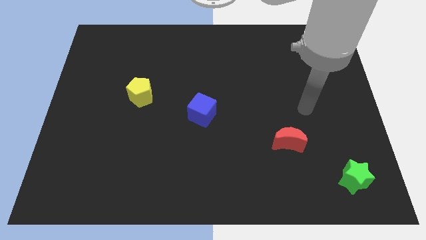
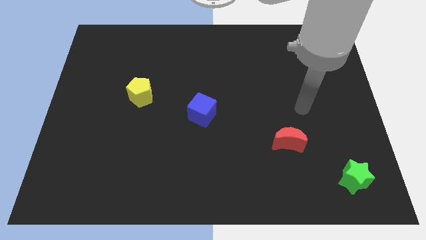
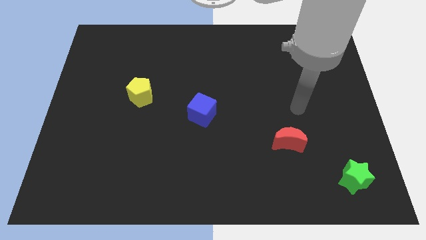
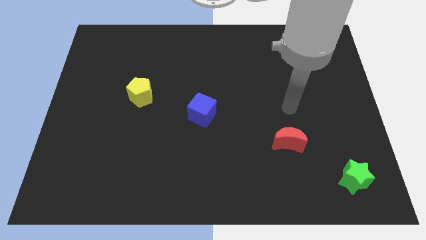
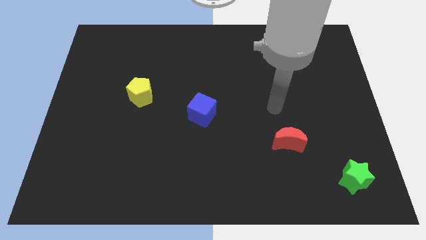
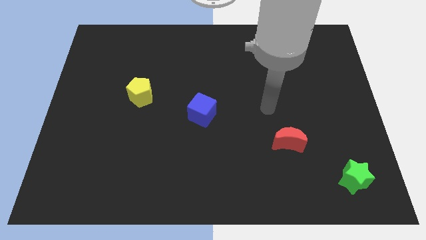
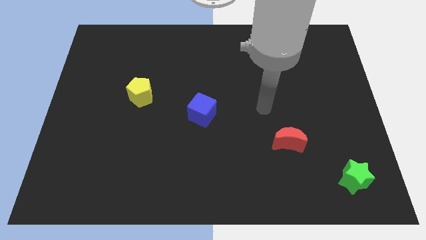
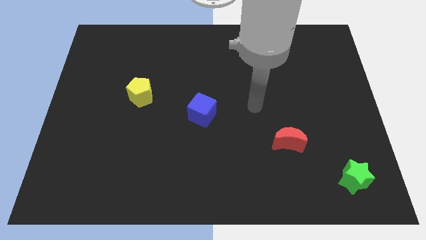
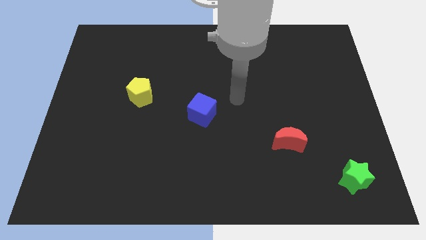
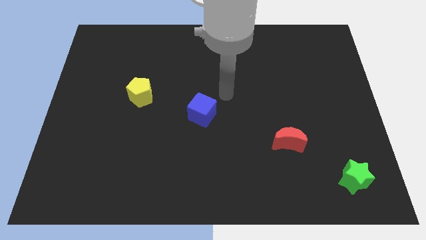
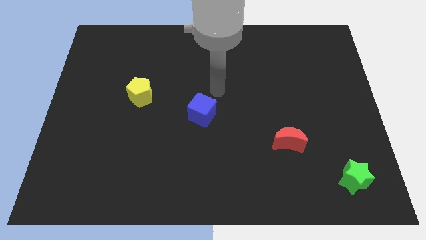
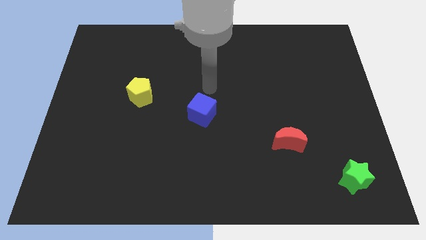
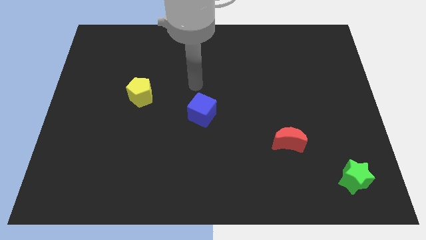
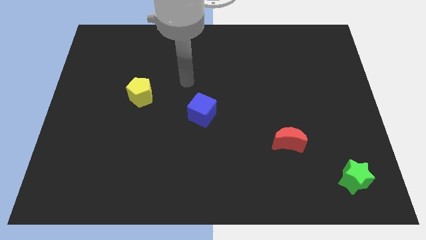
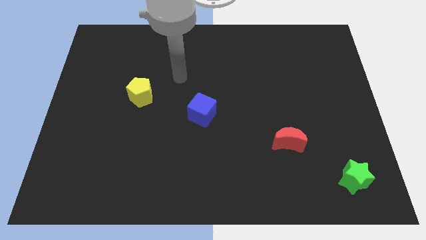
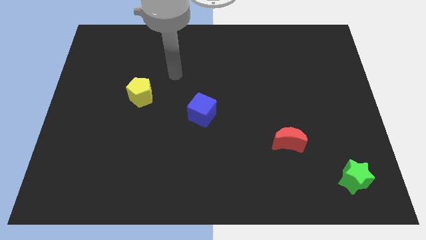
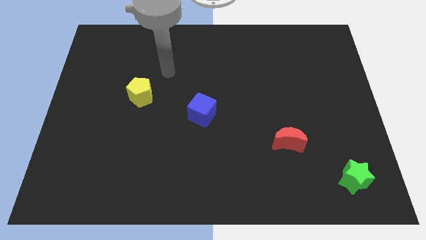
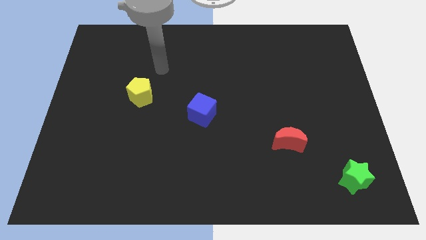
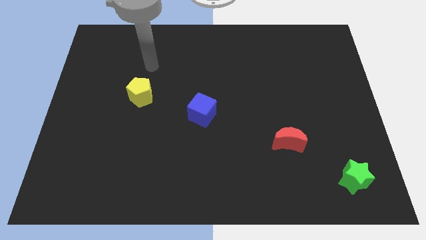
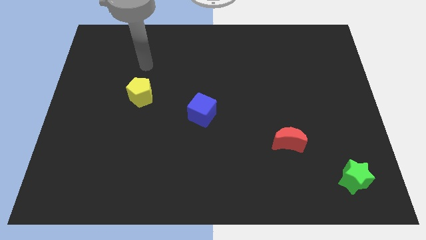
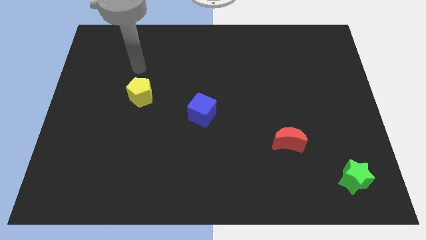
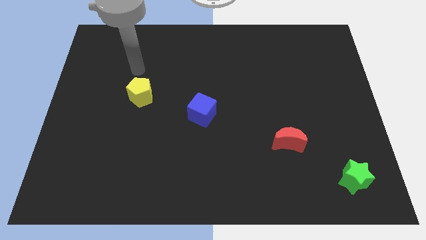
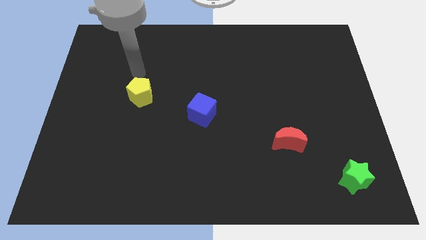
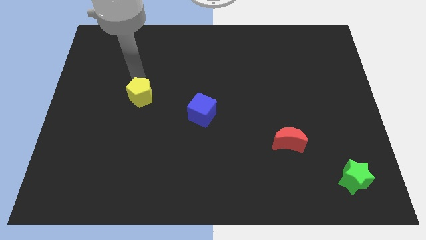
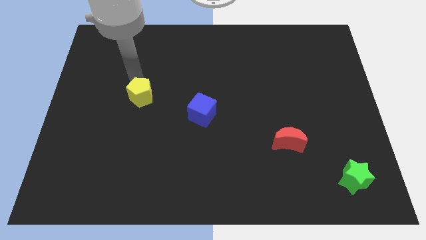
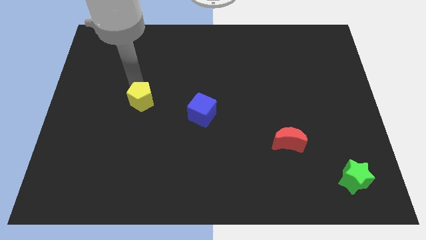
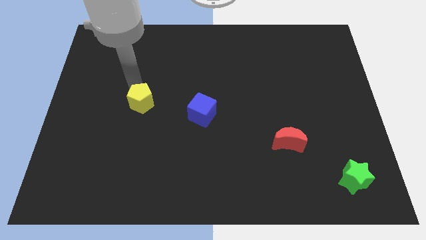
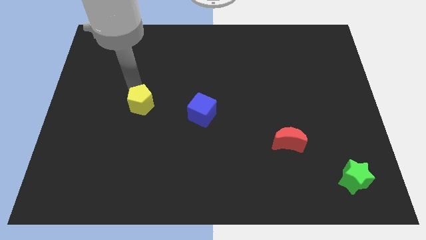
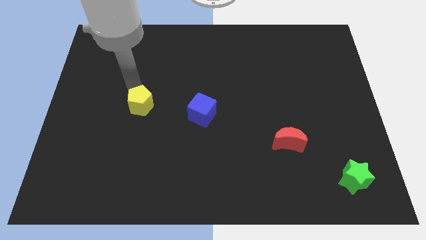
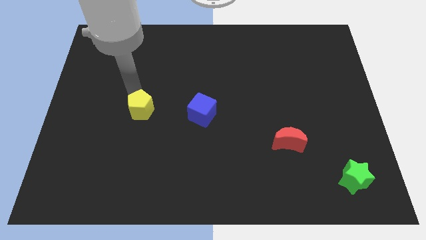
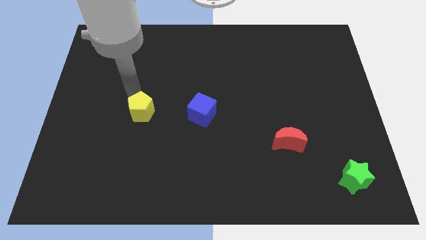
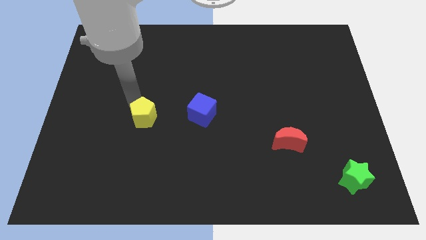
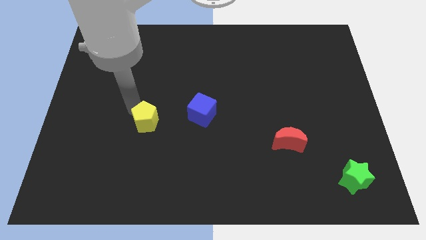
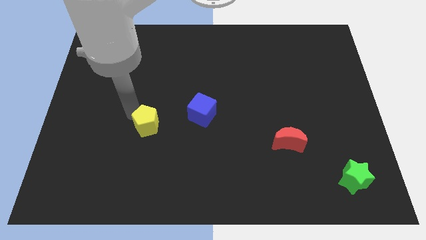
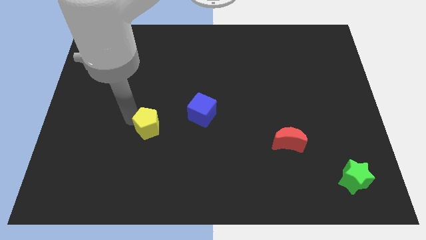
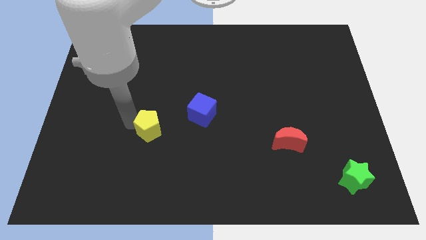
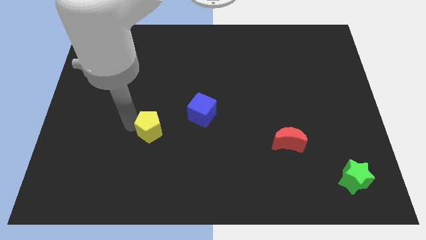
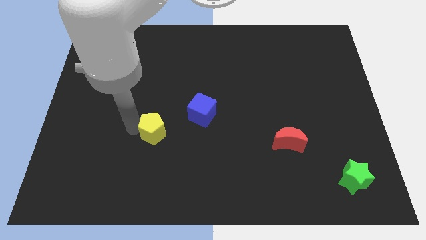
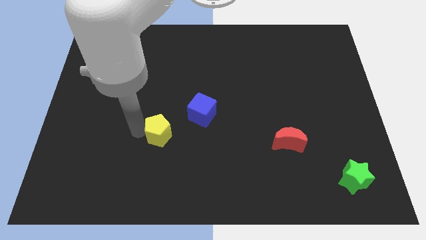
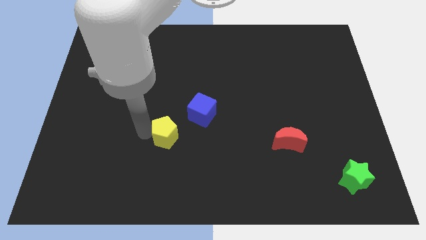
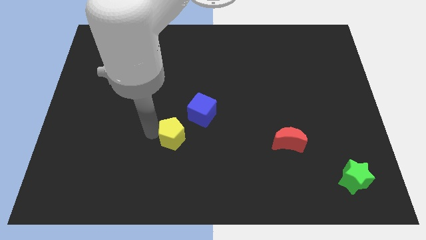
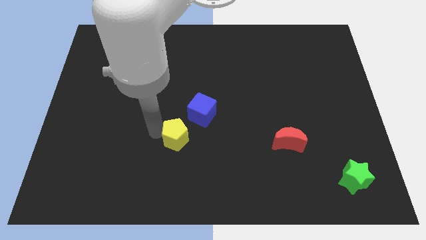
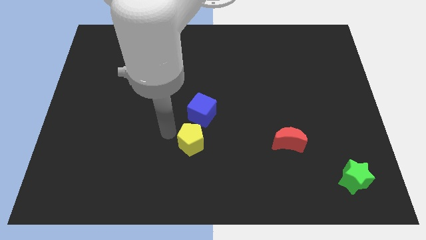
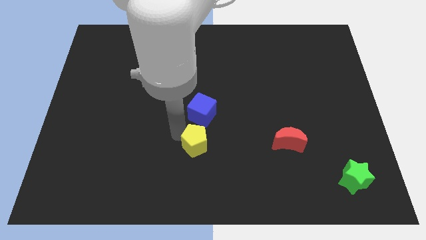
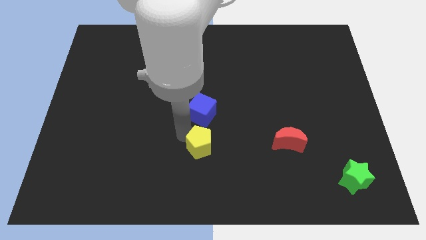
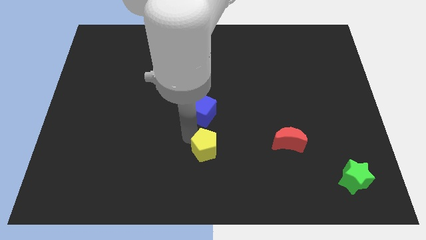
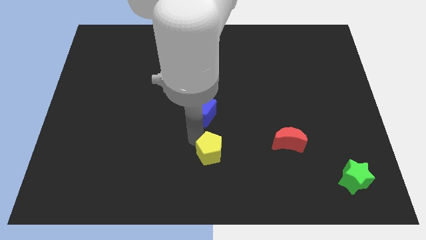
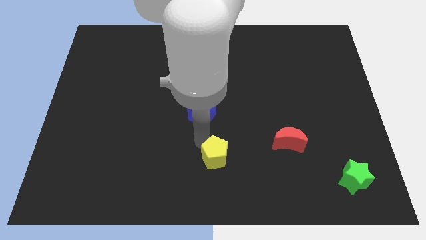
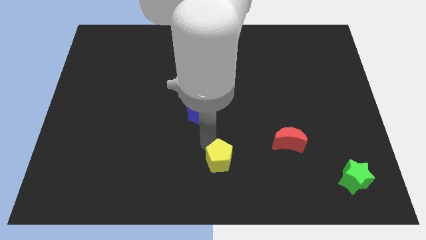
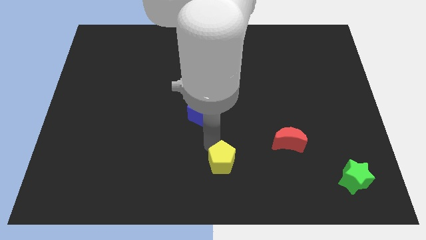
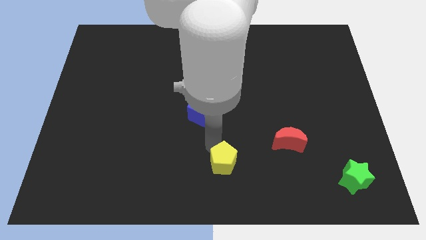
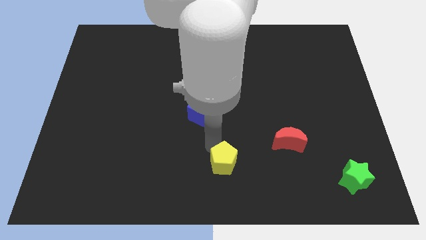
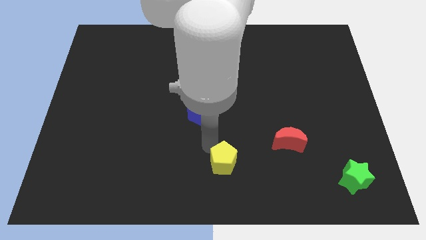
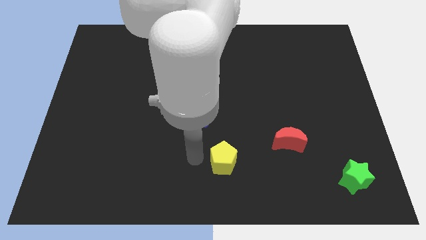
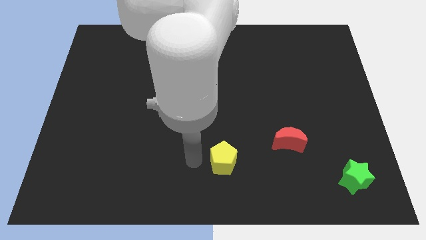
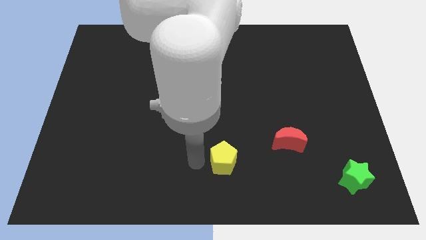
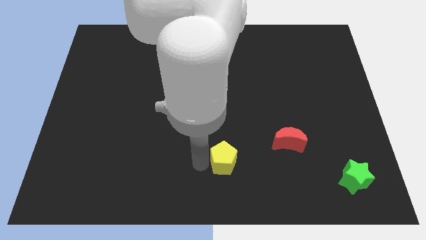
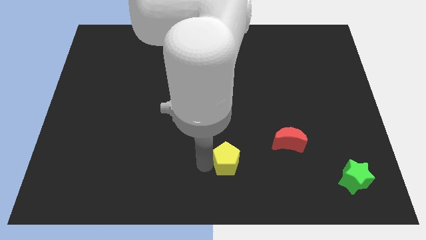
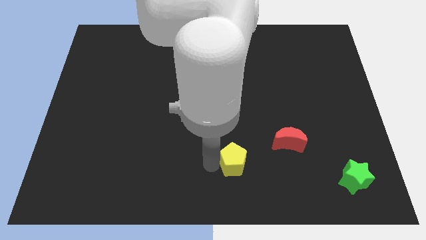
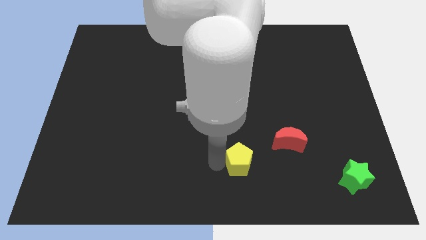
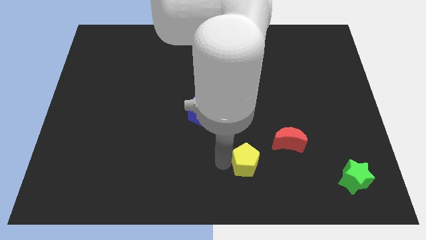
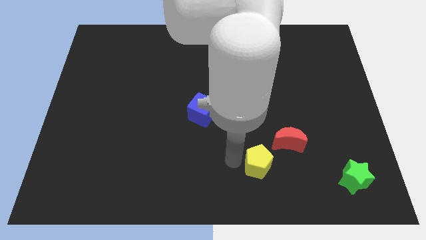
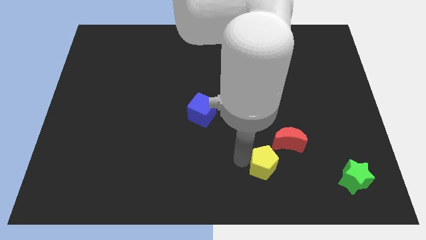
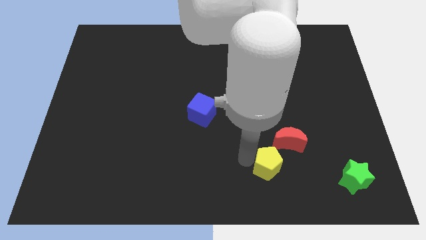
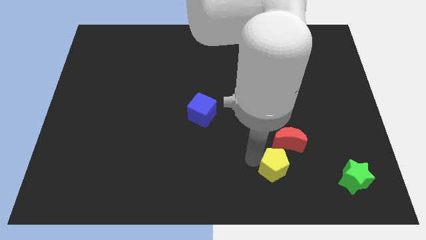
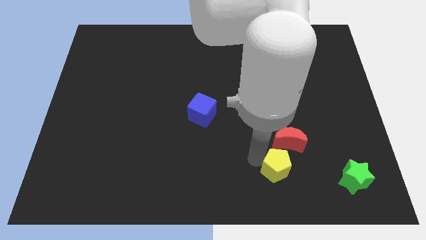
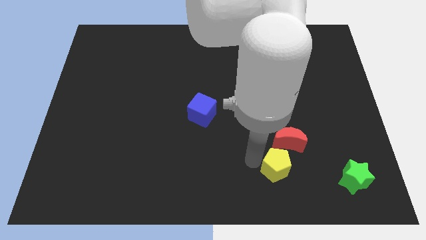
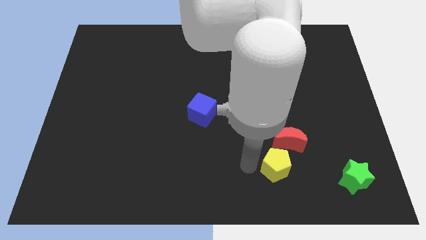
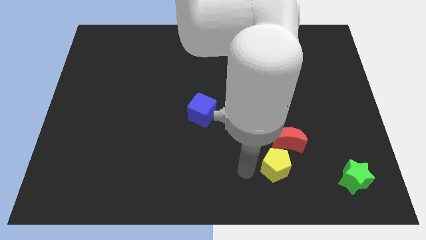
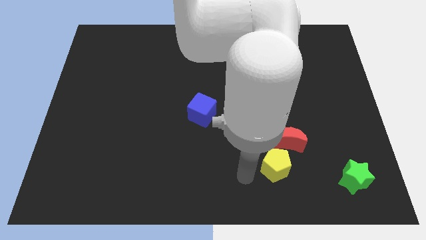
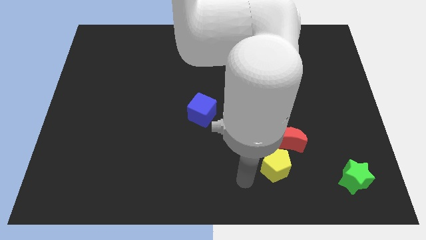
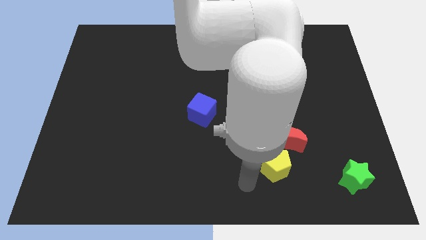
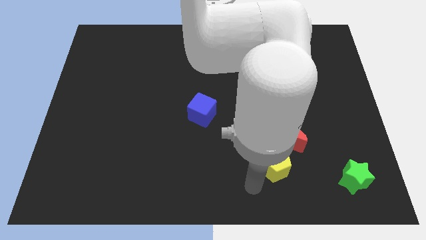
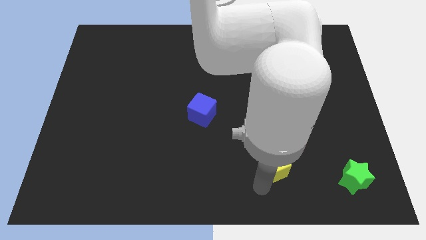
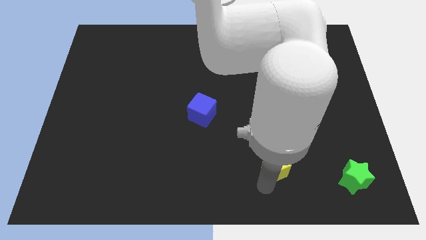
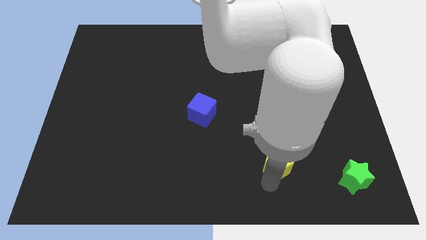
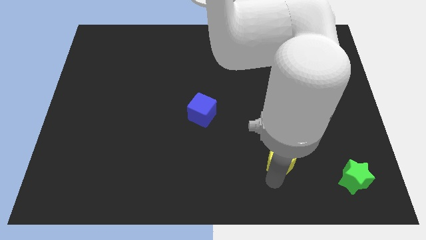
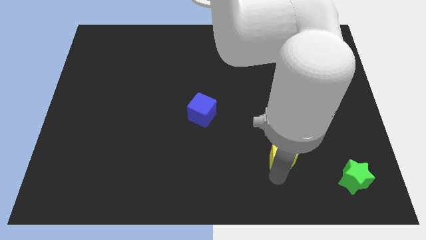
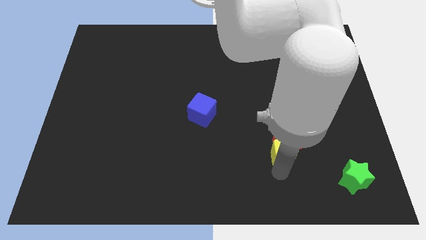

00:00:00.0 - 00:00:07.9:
move the pentagon next to the red moon

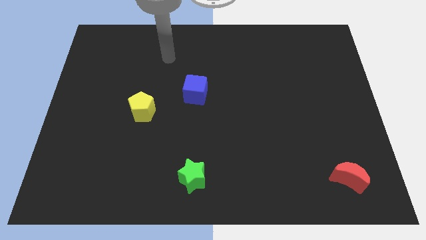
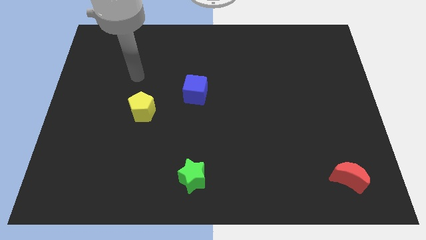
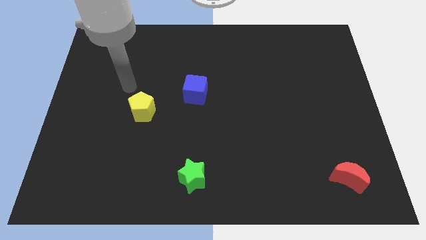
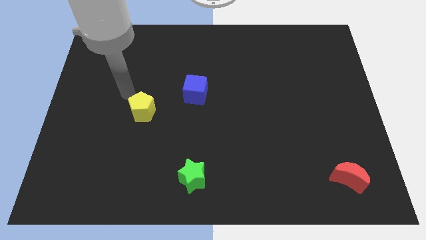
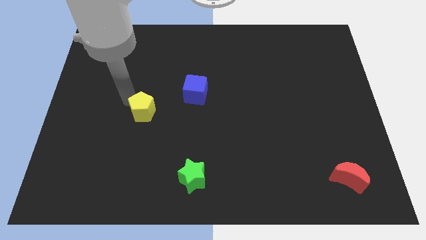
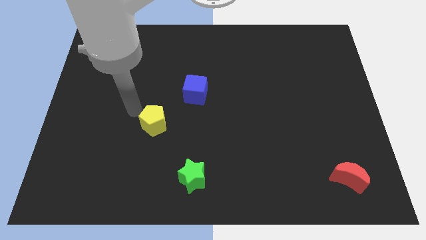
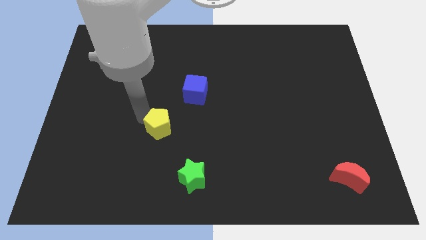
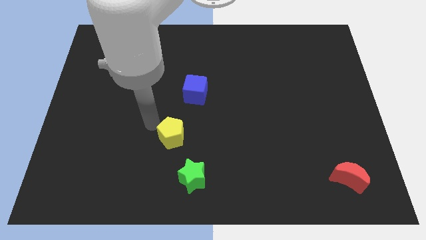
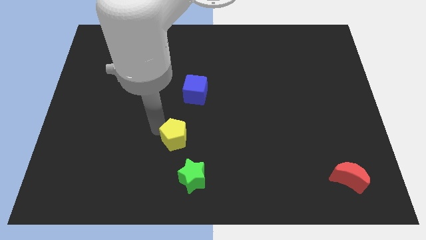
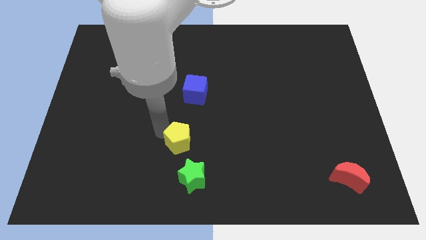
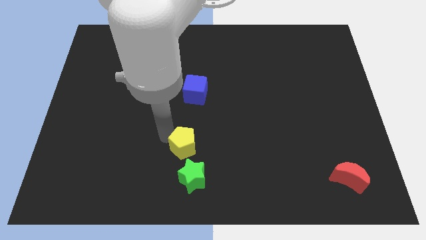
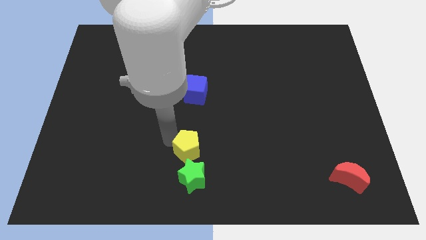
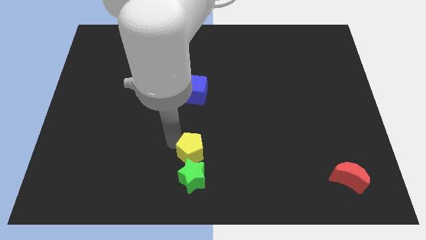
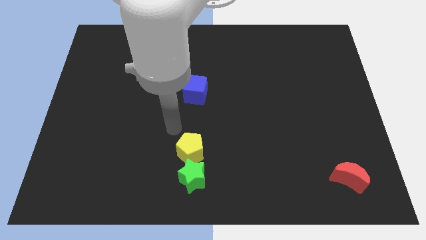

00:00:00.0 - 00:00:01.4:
slide the pentagon close to the green star
